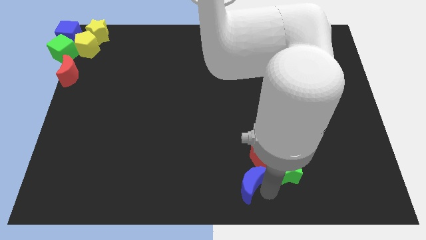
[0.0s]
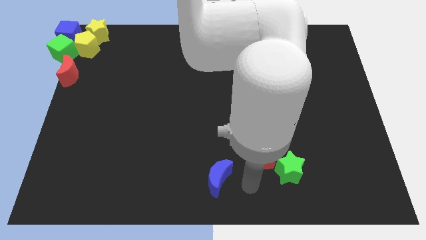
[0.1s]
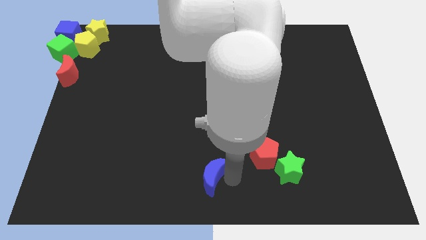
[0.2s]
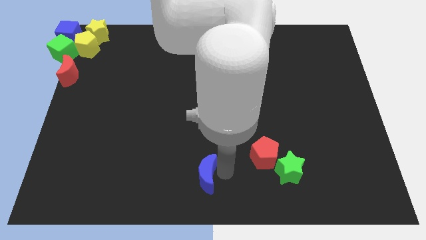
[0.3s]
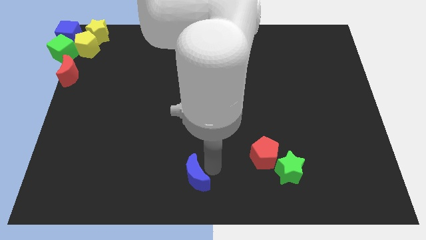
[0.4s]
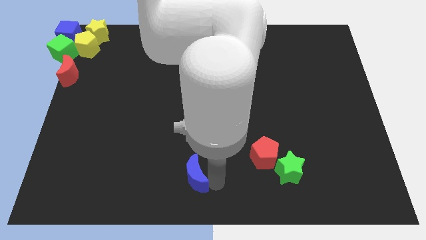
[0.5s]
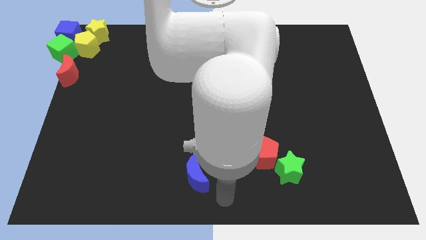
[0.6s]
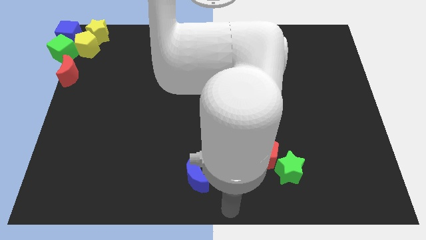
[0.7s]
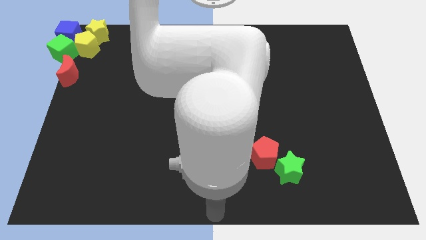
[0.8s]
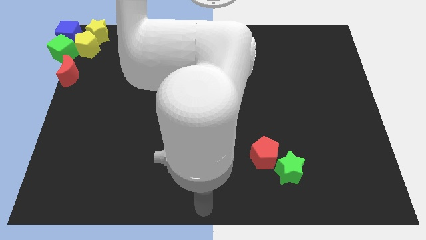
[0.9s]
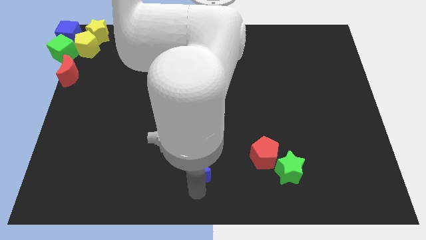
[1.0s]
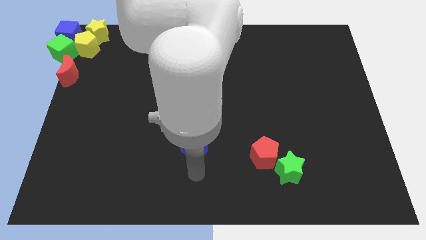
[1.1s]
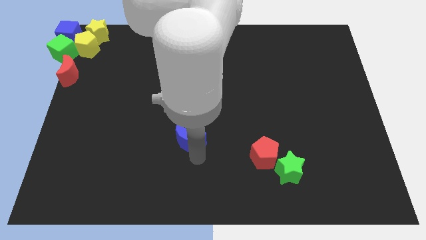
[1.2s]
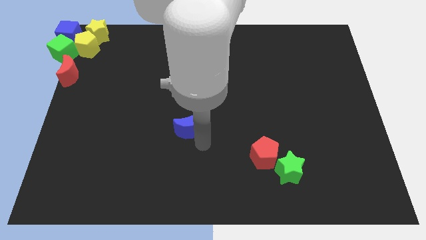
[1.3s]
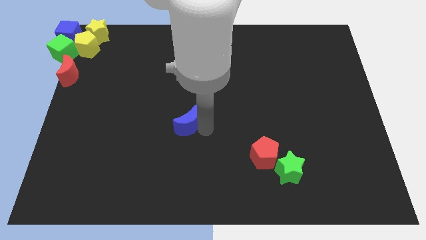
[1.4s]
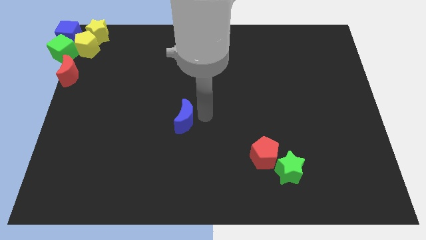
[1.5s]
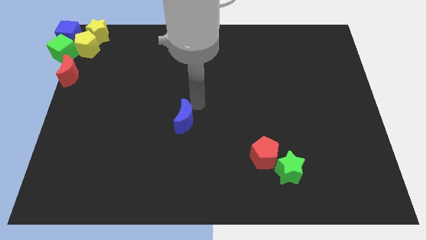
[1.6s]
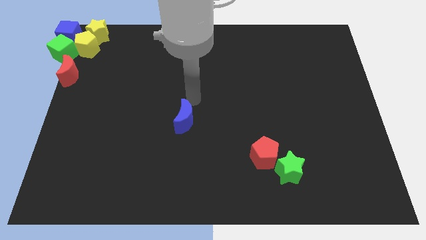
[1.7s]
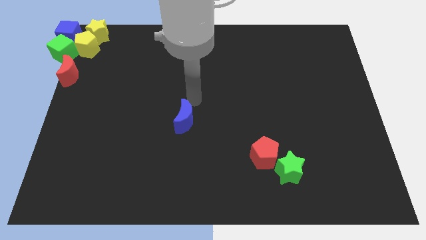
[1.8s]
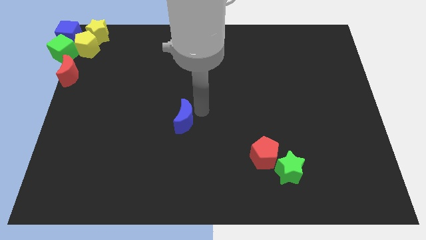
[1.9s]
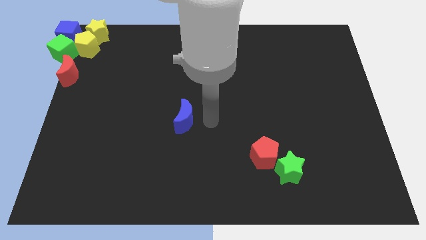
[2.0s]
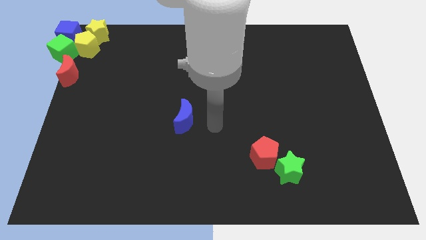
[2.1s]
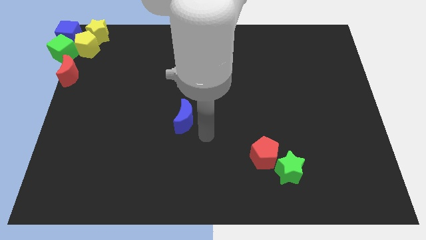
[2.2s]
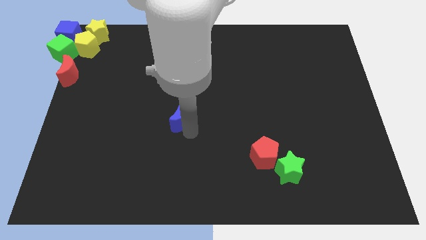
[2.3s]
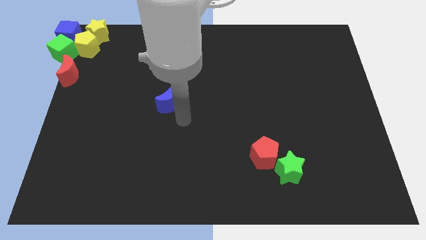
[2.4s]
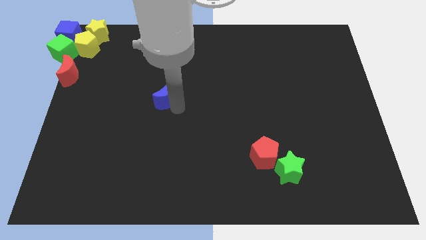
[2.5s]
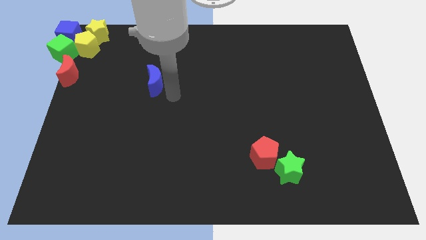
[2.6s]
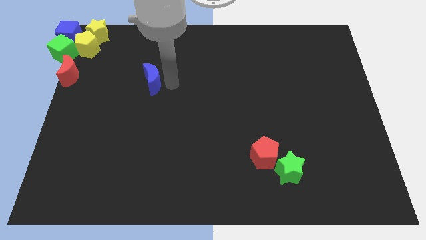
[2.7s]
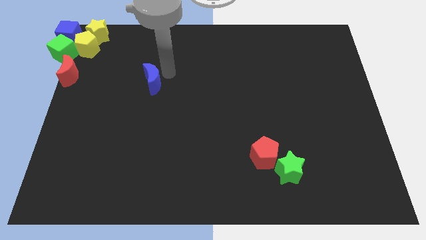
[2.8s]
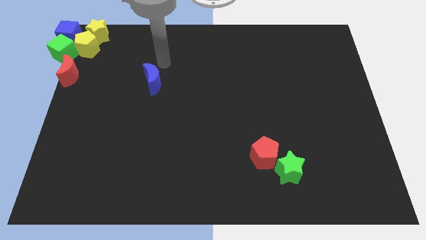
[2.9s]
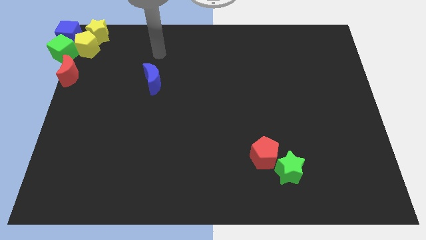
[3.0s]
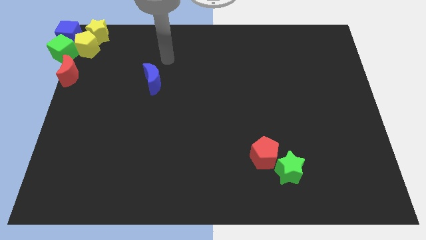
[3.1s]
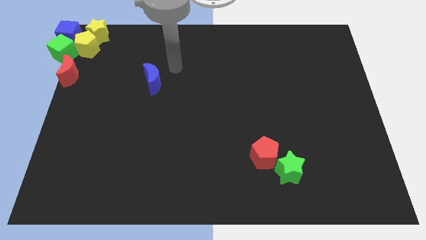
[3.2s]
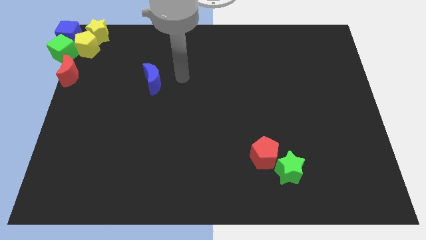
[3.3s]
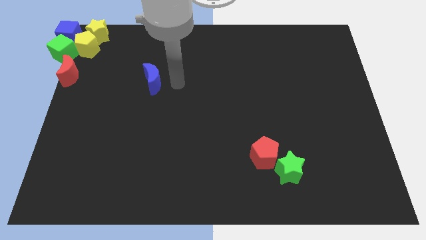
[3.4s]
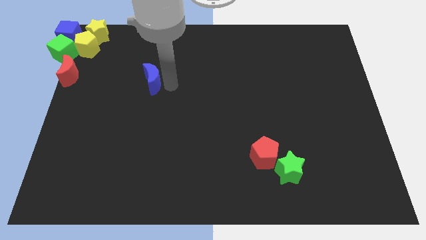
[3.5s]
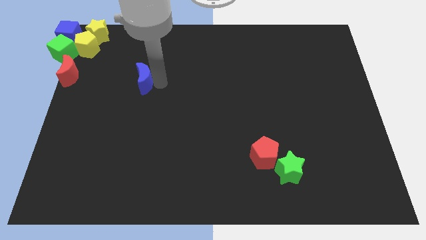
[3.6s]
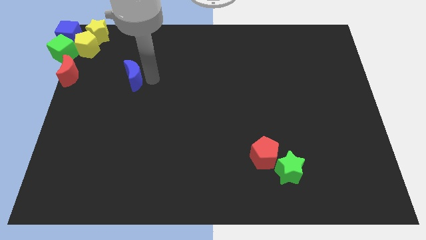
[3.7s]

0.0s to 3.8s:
put the blue moon diagonally to yellow blocks

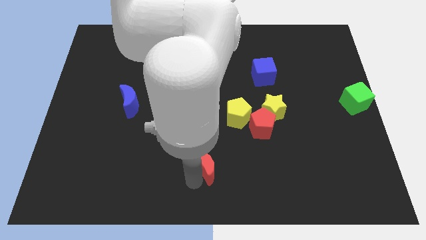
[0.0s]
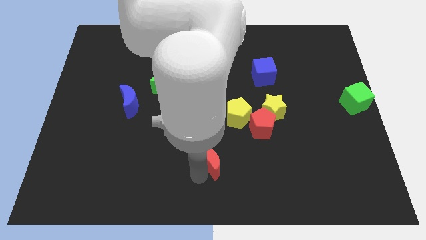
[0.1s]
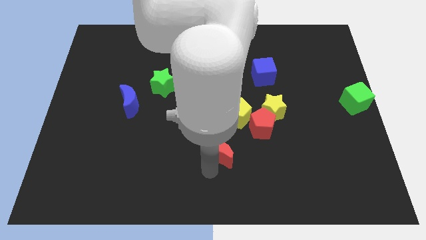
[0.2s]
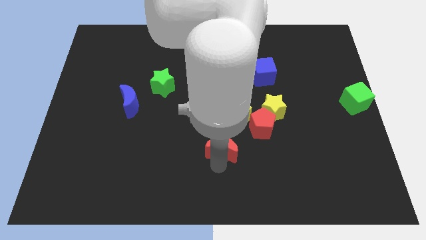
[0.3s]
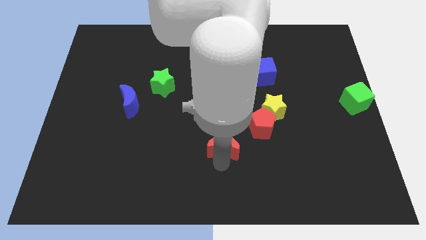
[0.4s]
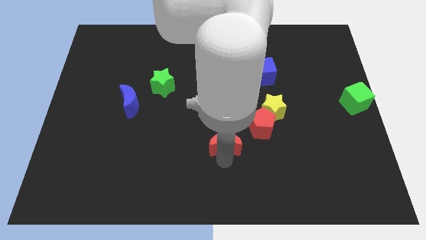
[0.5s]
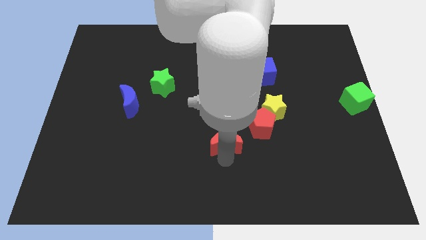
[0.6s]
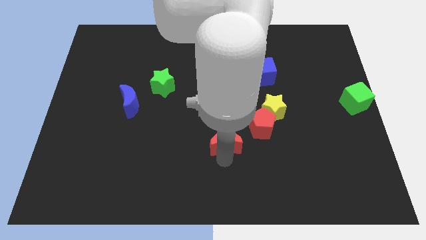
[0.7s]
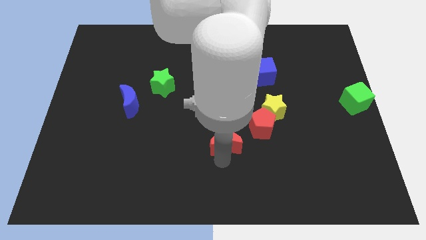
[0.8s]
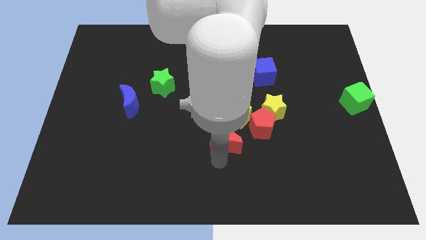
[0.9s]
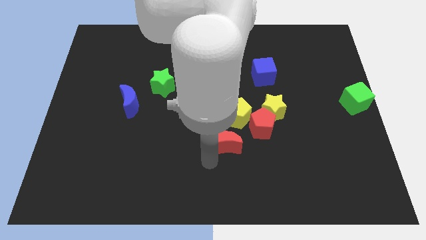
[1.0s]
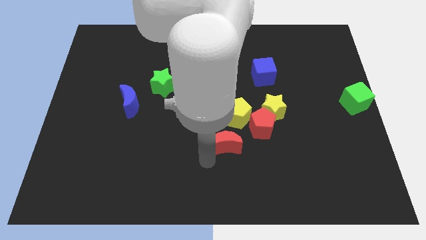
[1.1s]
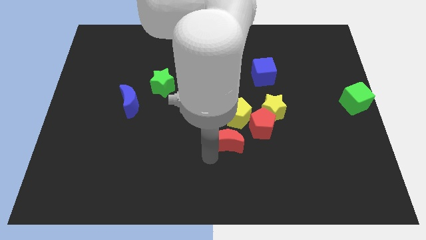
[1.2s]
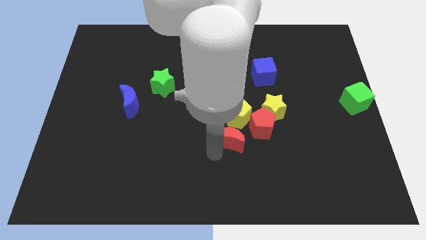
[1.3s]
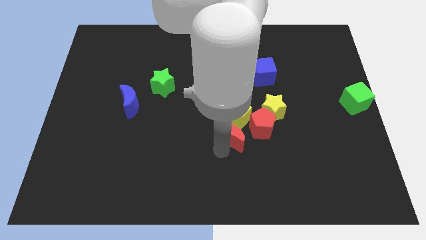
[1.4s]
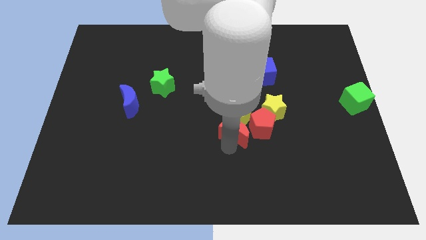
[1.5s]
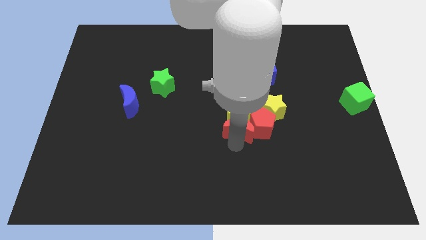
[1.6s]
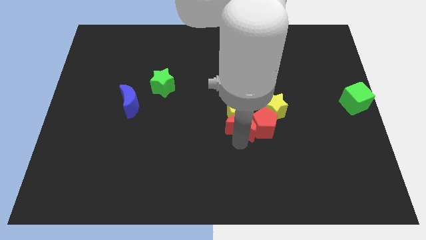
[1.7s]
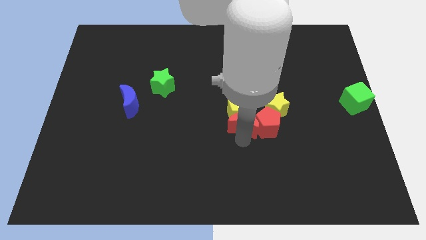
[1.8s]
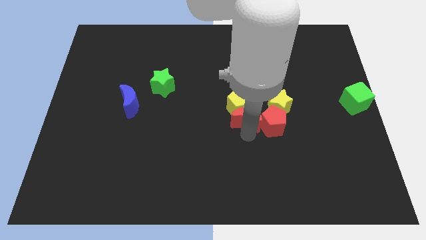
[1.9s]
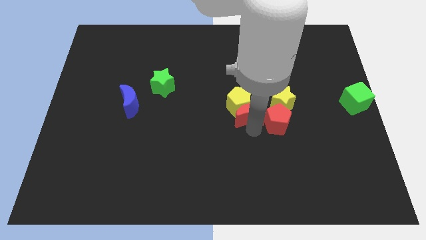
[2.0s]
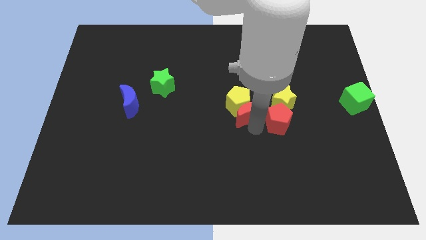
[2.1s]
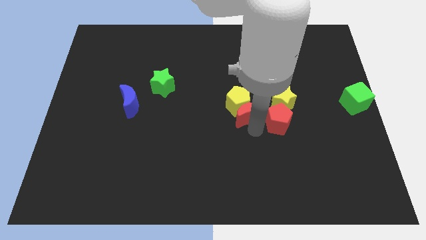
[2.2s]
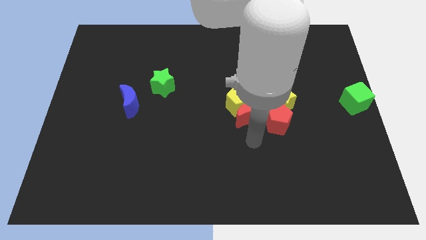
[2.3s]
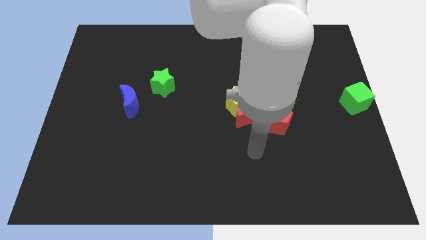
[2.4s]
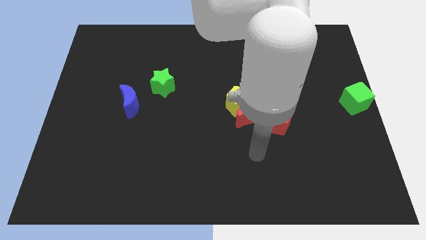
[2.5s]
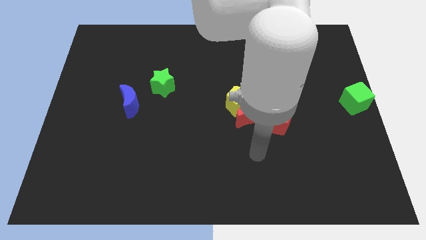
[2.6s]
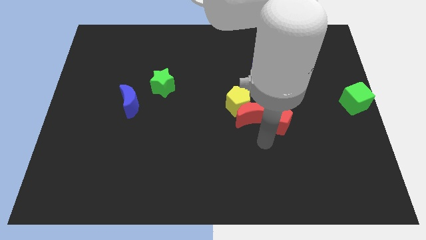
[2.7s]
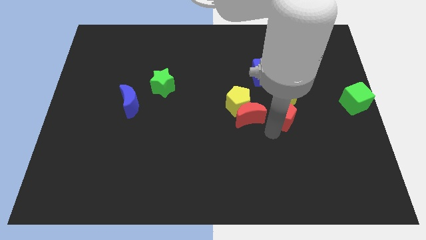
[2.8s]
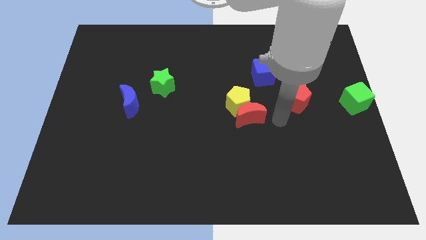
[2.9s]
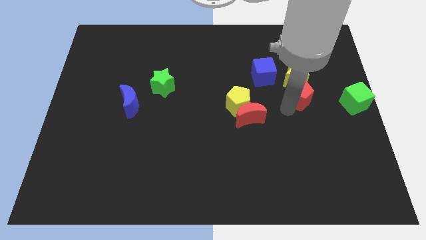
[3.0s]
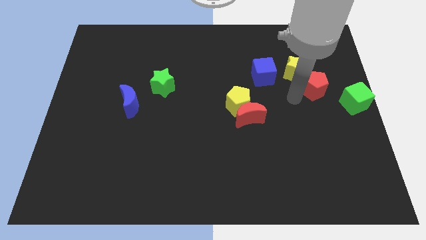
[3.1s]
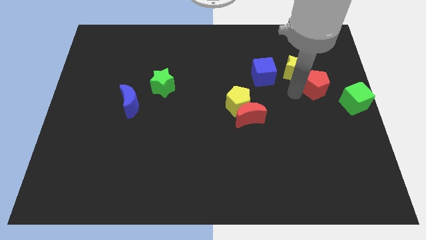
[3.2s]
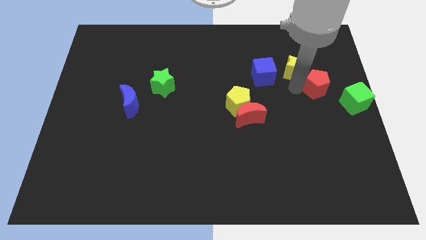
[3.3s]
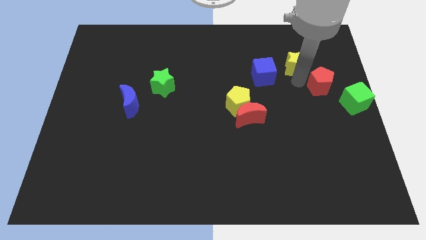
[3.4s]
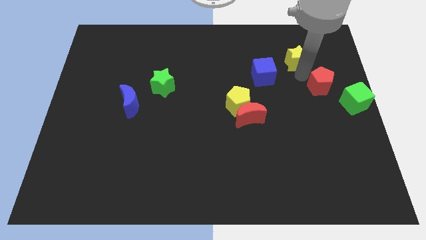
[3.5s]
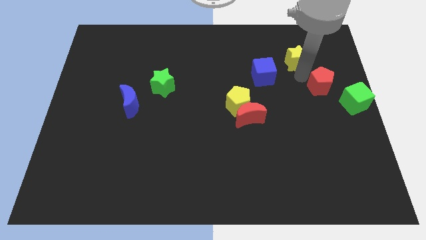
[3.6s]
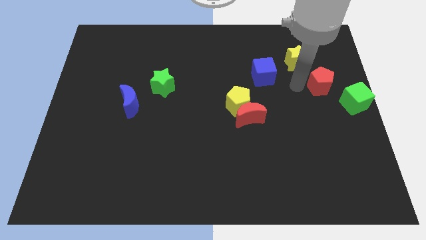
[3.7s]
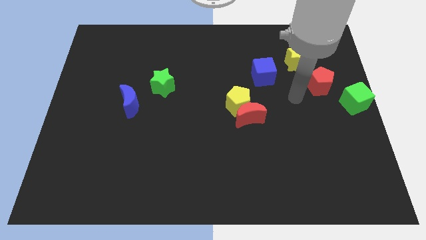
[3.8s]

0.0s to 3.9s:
push the red moon into the yellow pentagon

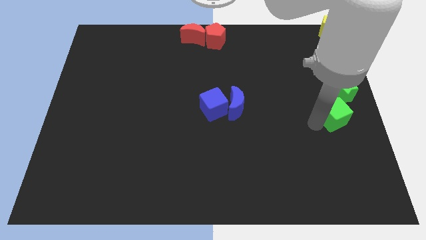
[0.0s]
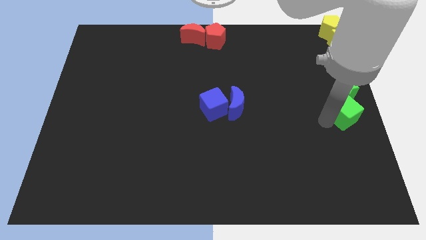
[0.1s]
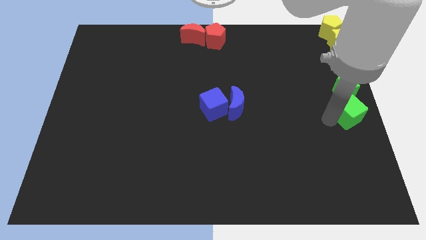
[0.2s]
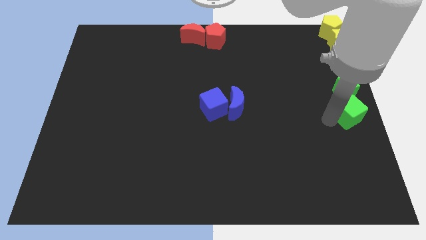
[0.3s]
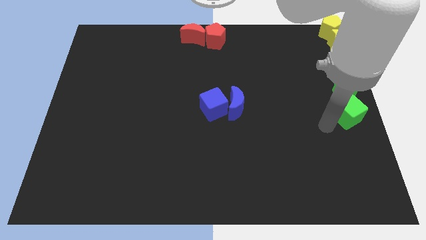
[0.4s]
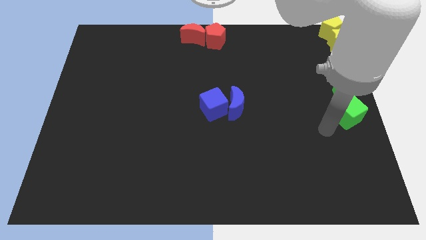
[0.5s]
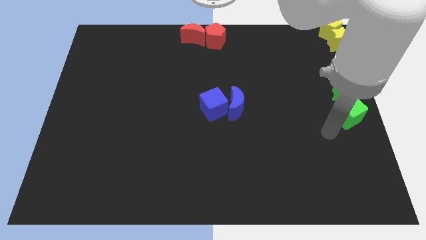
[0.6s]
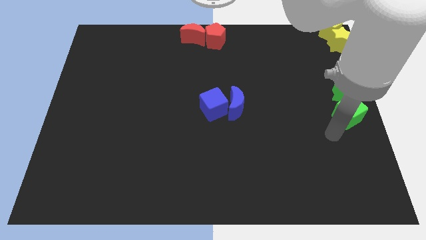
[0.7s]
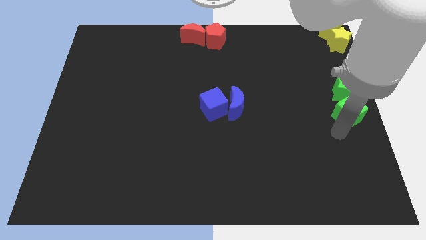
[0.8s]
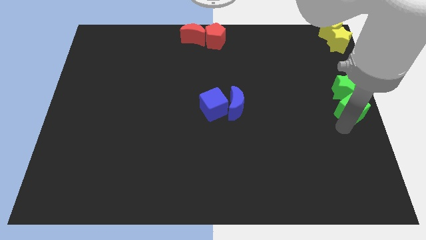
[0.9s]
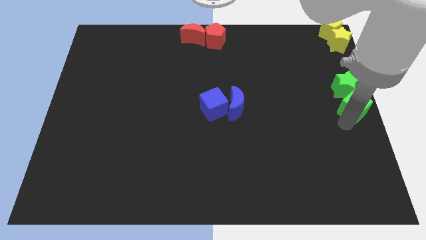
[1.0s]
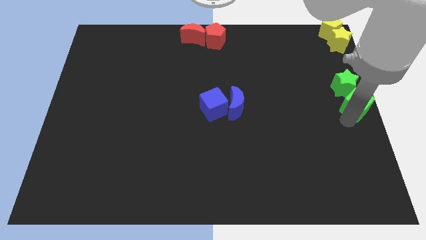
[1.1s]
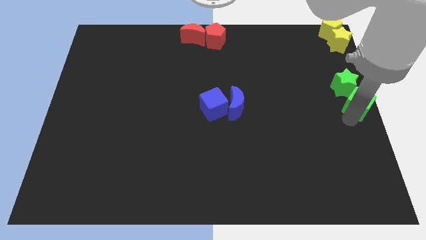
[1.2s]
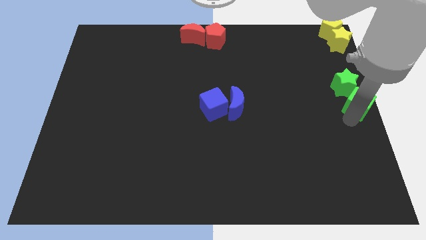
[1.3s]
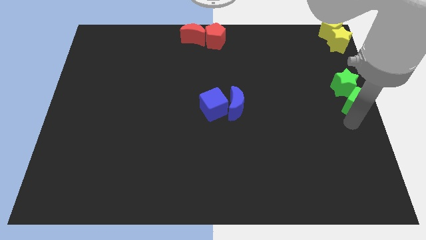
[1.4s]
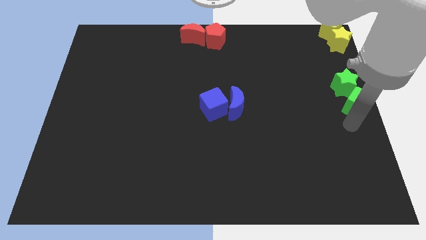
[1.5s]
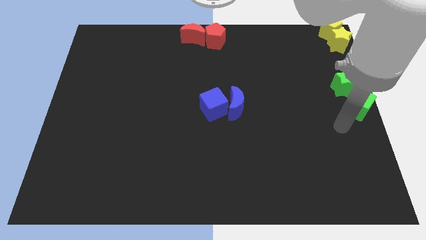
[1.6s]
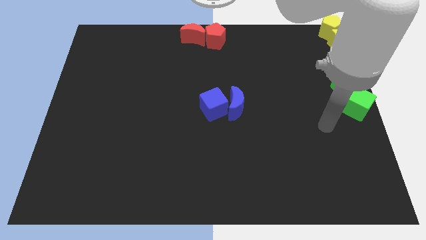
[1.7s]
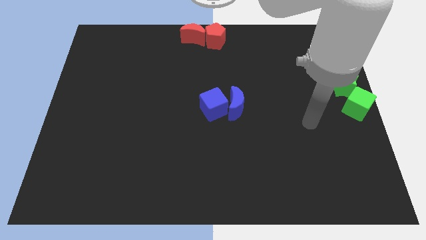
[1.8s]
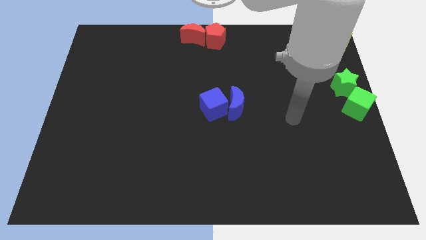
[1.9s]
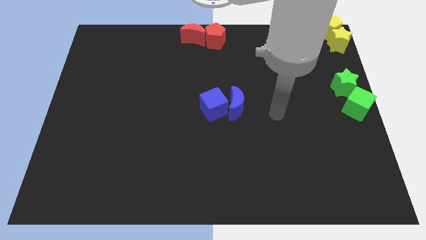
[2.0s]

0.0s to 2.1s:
push the green cube into the green star
